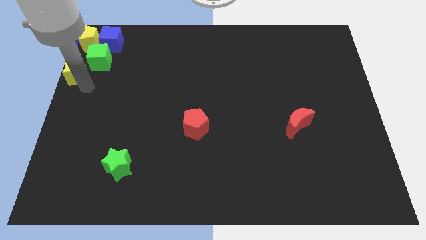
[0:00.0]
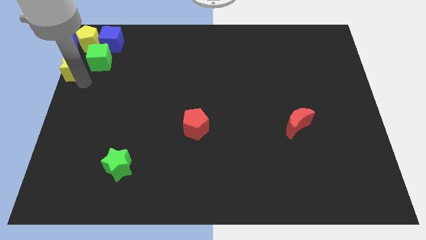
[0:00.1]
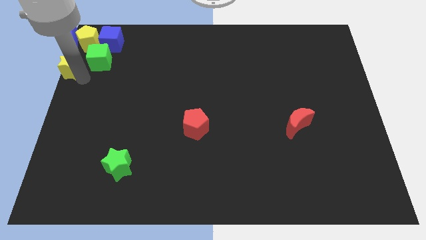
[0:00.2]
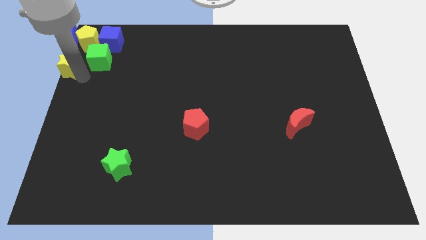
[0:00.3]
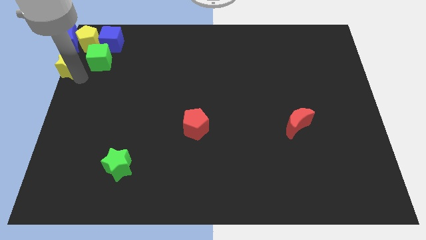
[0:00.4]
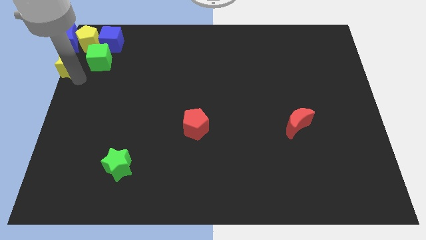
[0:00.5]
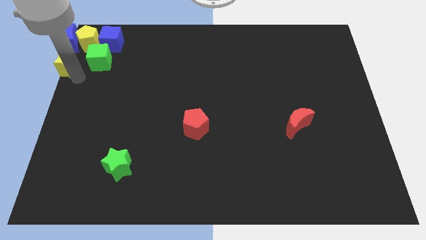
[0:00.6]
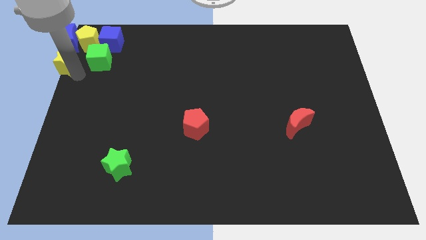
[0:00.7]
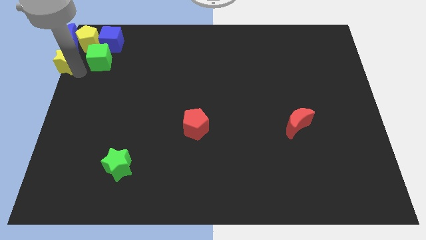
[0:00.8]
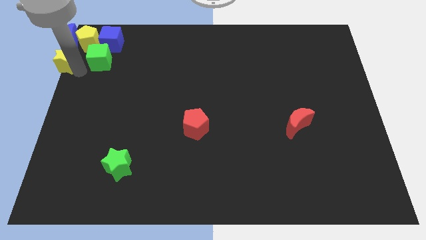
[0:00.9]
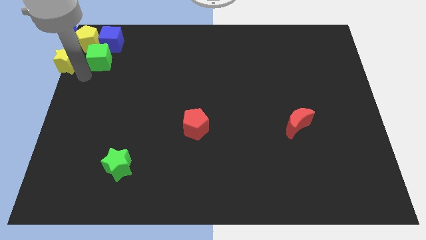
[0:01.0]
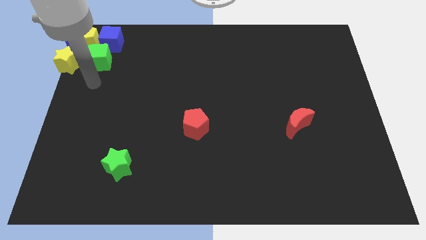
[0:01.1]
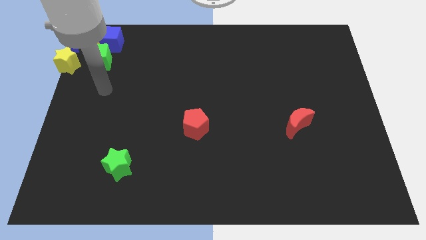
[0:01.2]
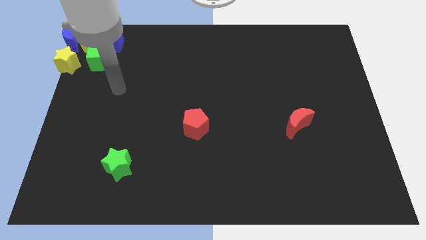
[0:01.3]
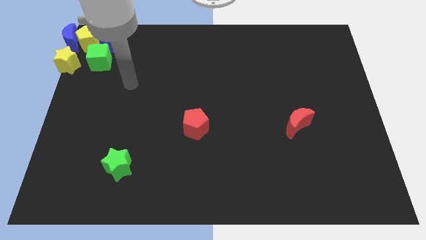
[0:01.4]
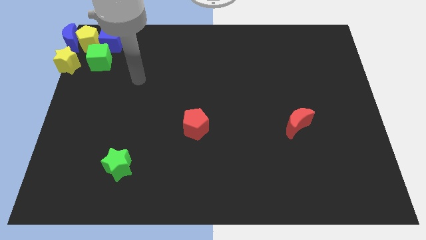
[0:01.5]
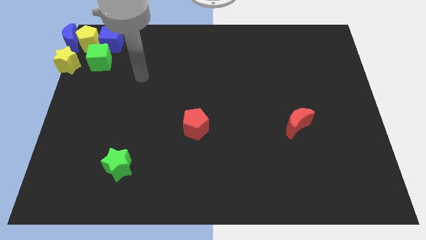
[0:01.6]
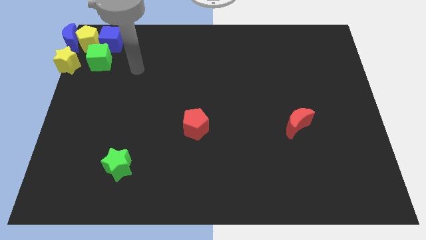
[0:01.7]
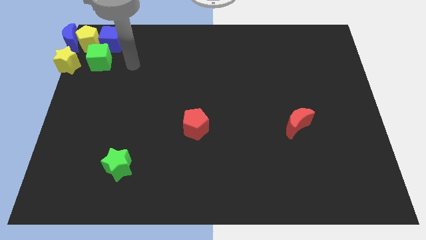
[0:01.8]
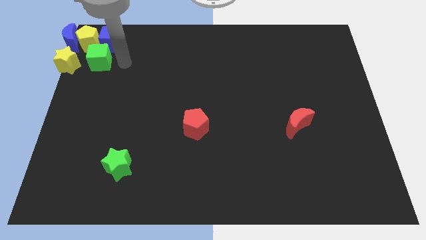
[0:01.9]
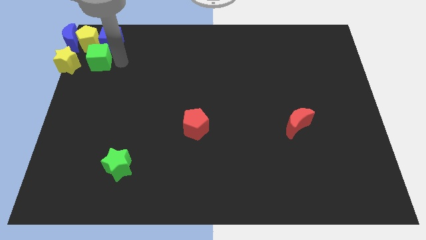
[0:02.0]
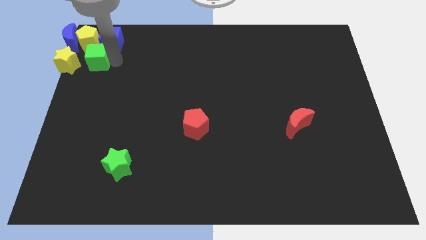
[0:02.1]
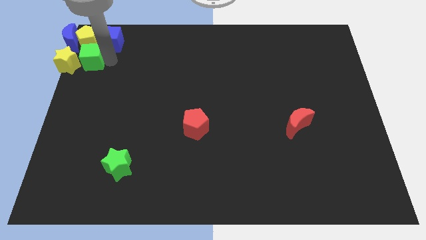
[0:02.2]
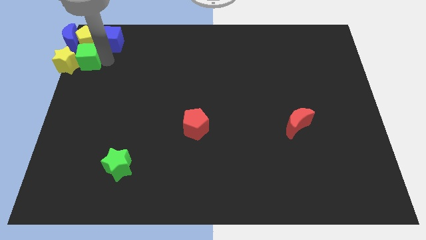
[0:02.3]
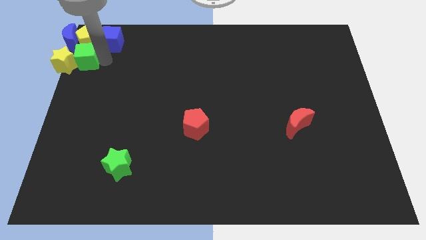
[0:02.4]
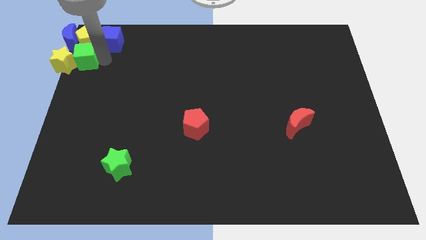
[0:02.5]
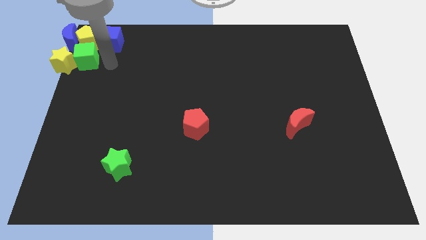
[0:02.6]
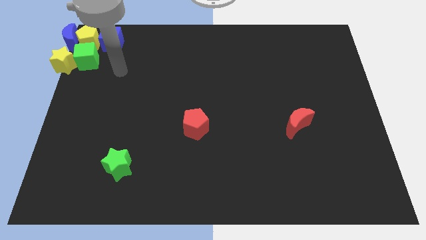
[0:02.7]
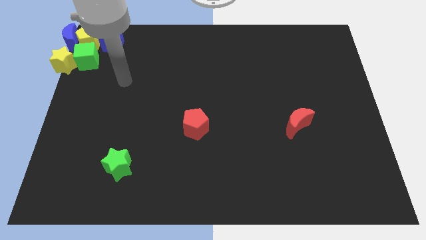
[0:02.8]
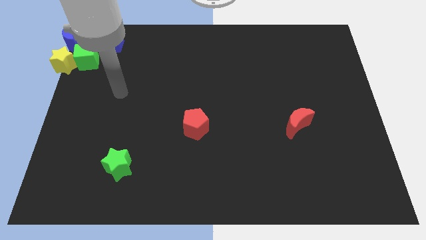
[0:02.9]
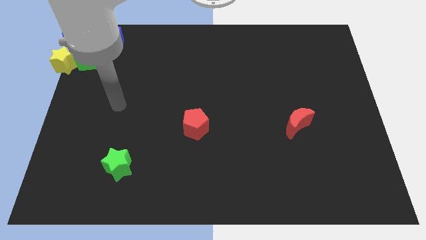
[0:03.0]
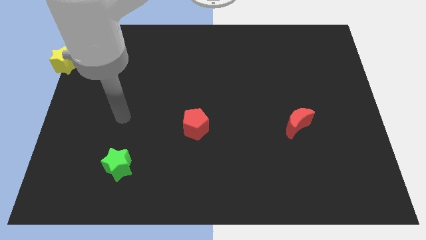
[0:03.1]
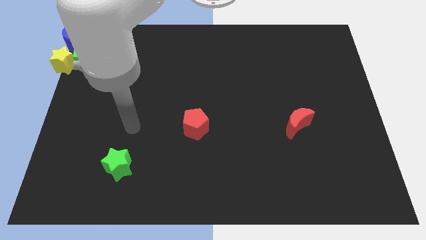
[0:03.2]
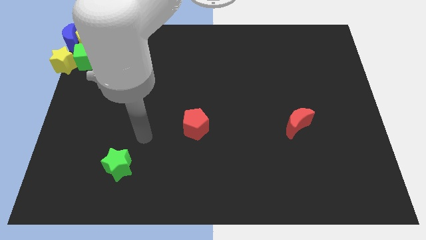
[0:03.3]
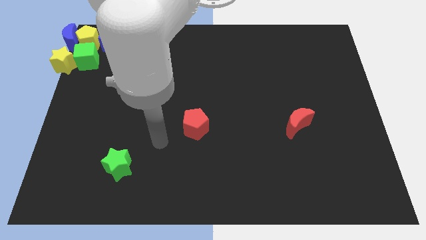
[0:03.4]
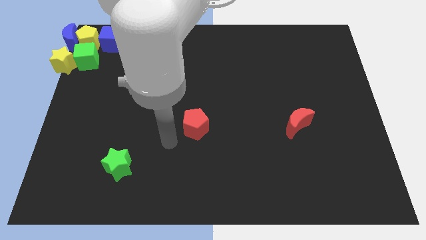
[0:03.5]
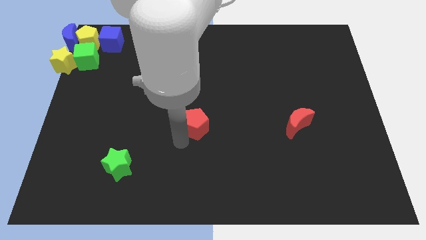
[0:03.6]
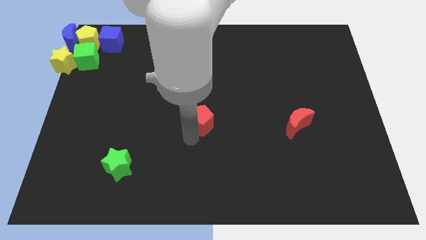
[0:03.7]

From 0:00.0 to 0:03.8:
place the green cube to the right side of the yellow star

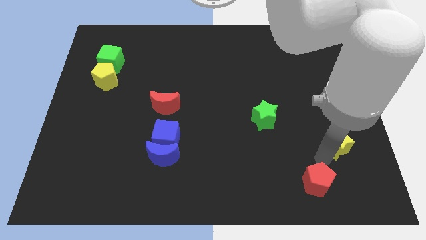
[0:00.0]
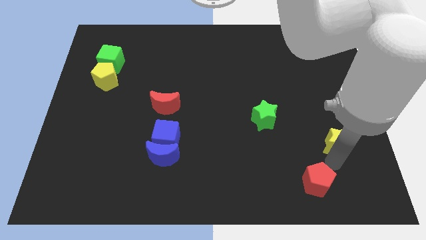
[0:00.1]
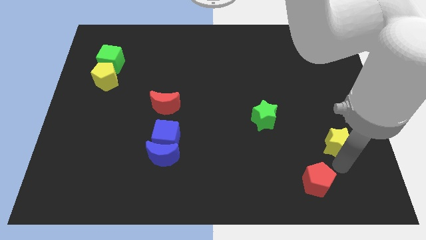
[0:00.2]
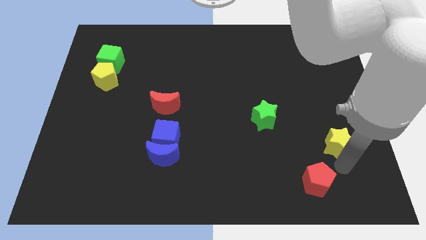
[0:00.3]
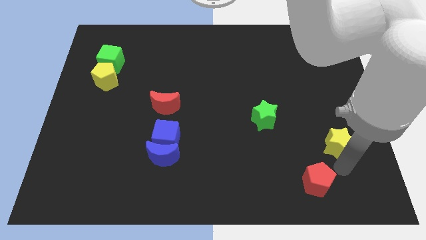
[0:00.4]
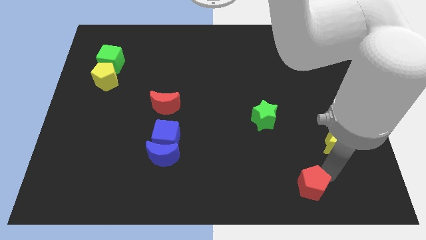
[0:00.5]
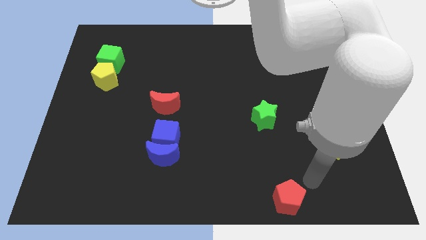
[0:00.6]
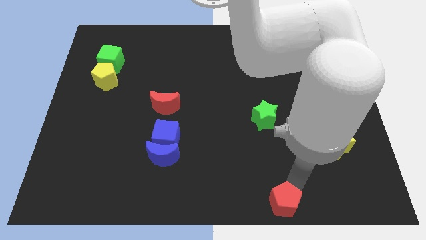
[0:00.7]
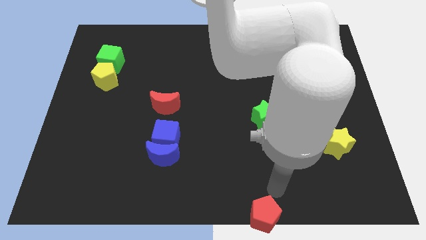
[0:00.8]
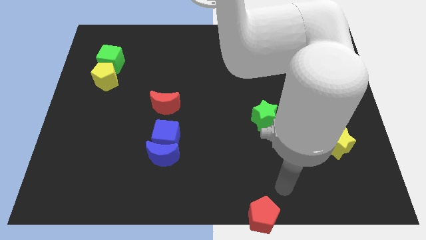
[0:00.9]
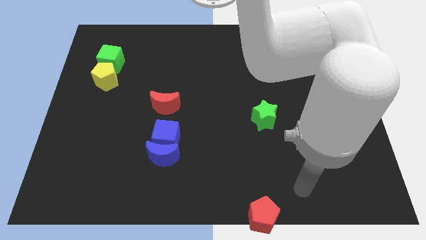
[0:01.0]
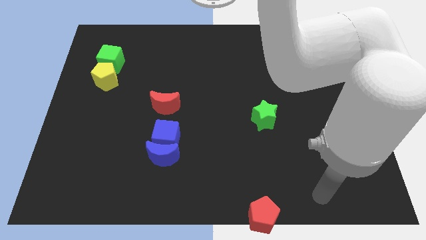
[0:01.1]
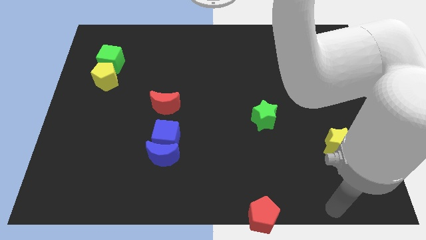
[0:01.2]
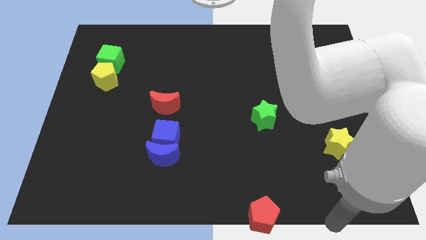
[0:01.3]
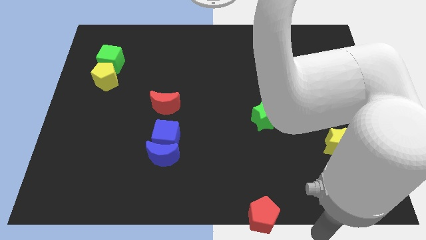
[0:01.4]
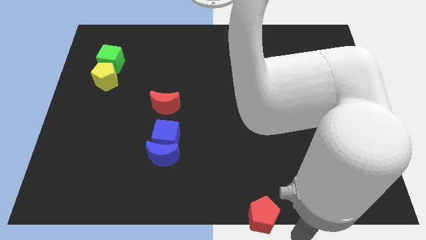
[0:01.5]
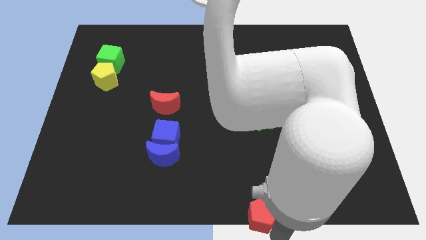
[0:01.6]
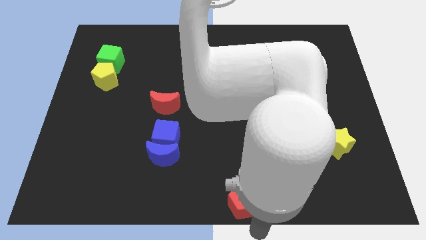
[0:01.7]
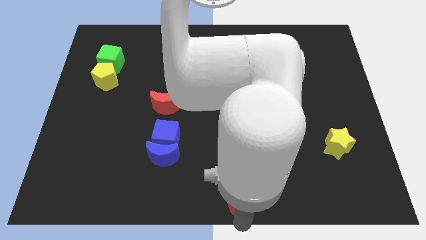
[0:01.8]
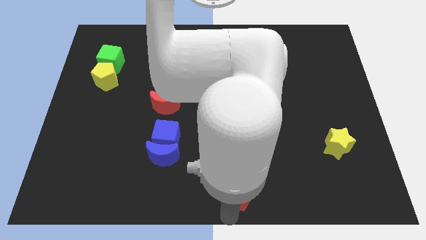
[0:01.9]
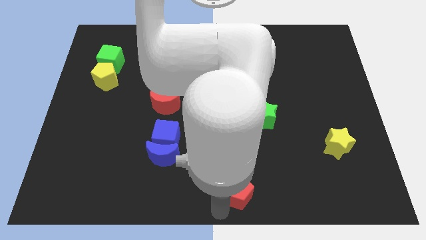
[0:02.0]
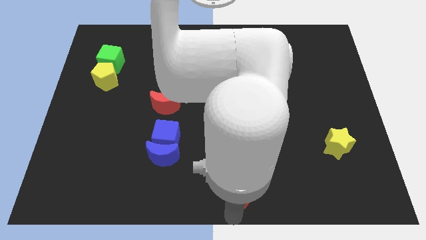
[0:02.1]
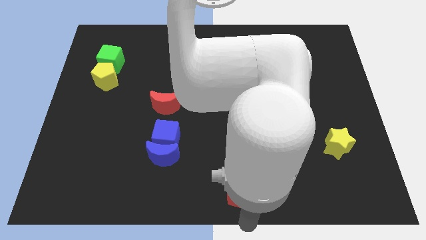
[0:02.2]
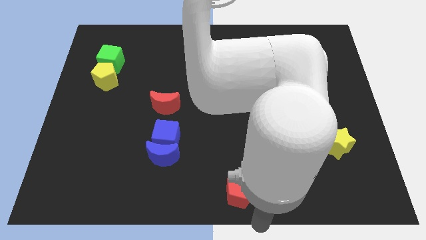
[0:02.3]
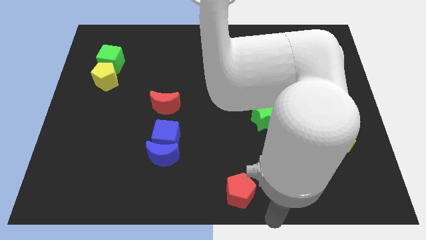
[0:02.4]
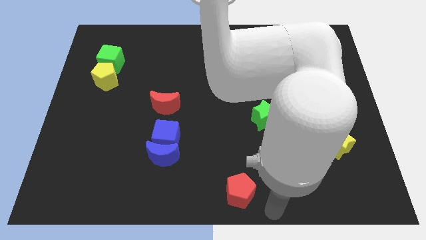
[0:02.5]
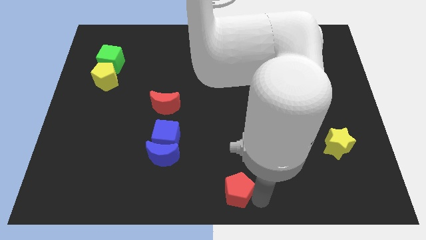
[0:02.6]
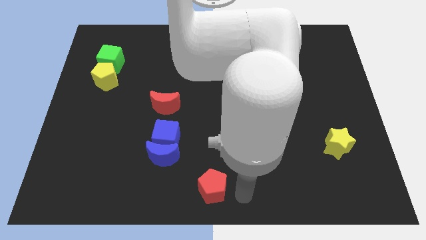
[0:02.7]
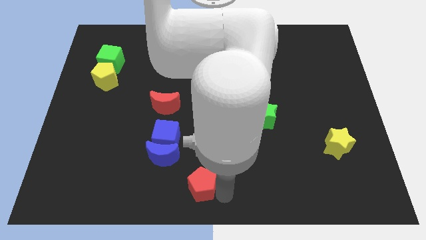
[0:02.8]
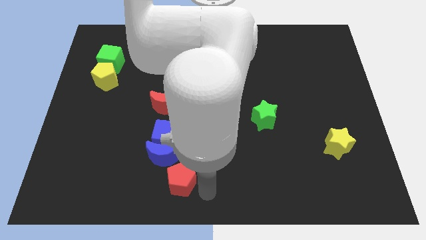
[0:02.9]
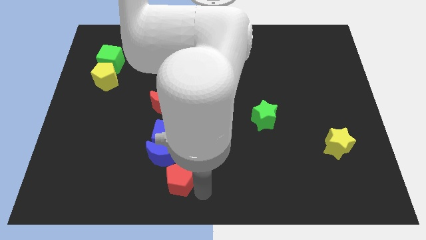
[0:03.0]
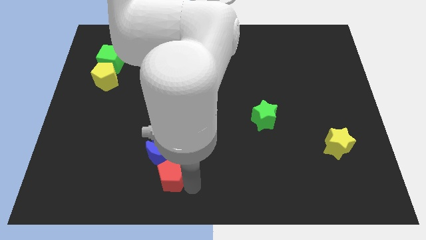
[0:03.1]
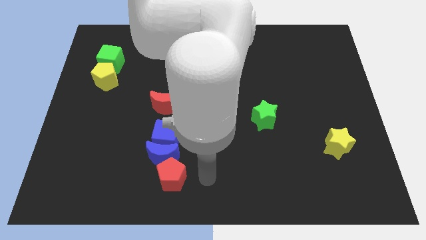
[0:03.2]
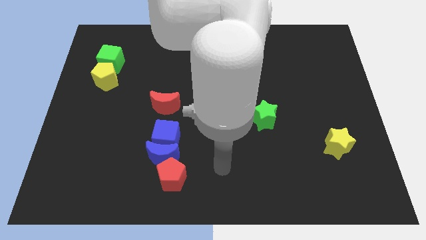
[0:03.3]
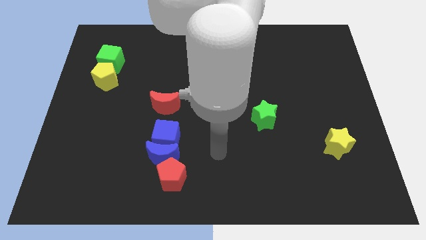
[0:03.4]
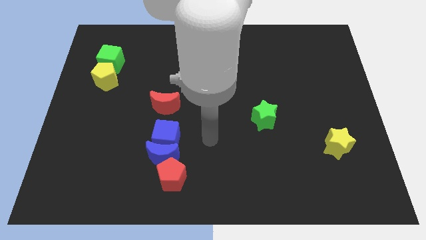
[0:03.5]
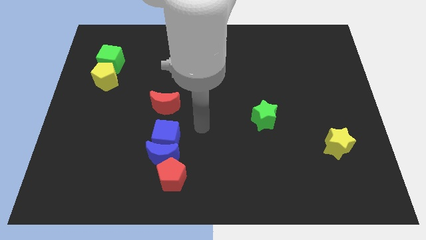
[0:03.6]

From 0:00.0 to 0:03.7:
push the red pentagon into the blue crescent

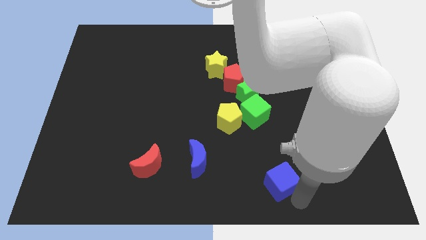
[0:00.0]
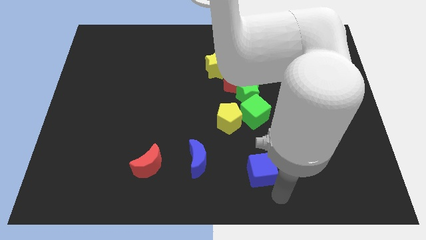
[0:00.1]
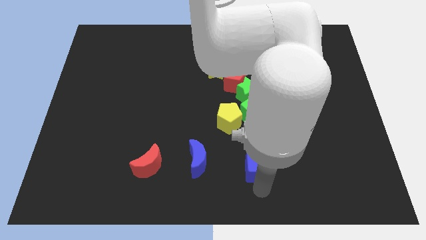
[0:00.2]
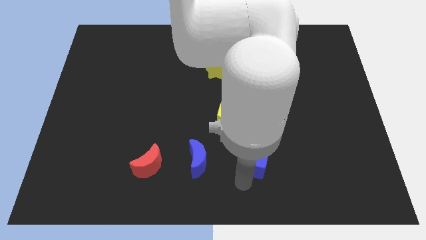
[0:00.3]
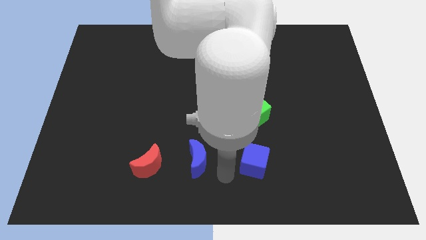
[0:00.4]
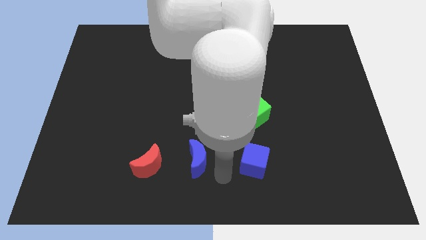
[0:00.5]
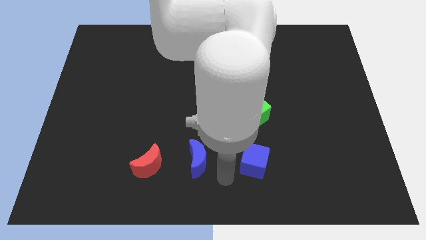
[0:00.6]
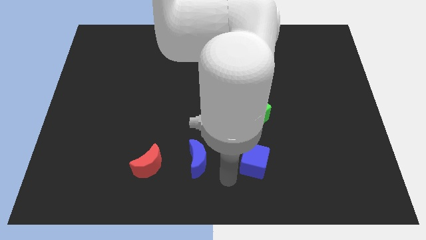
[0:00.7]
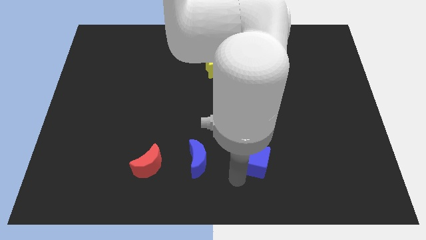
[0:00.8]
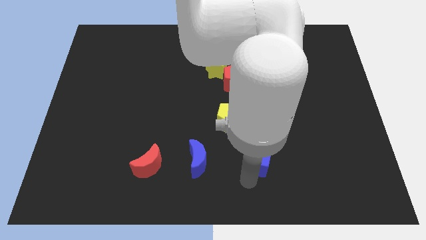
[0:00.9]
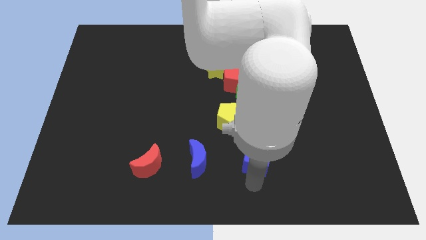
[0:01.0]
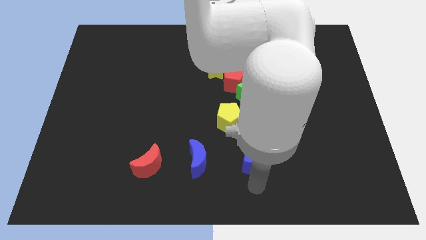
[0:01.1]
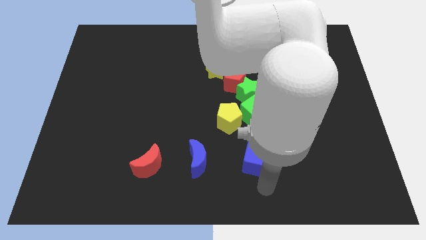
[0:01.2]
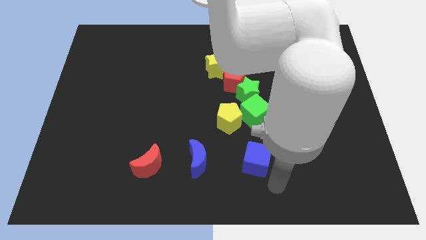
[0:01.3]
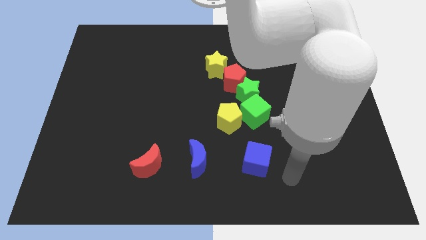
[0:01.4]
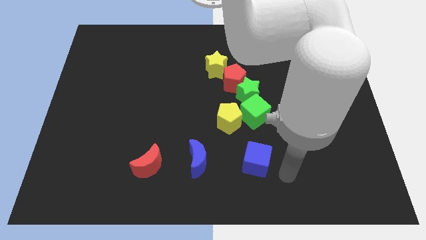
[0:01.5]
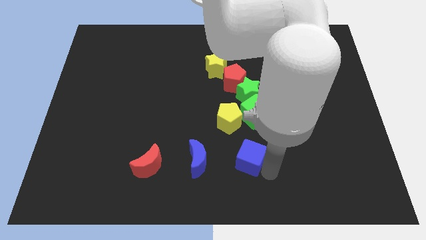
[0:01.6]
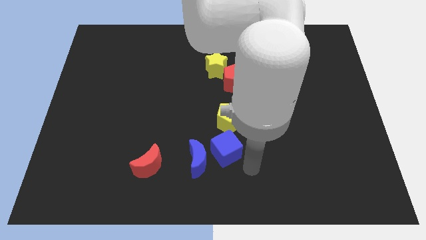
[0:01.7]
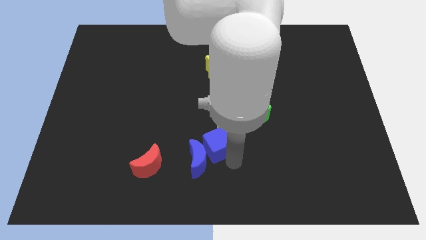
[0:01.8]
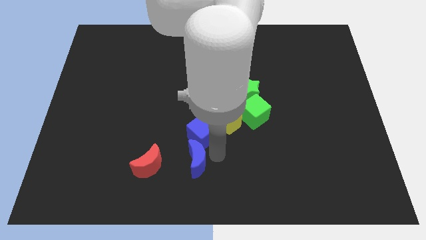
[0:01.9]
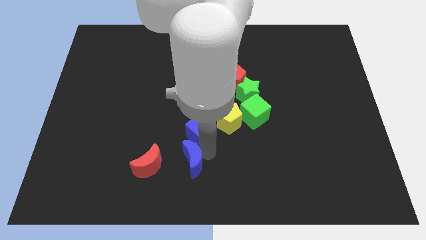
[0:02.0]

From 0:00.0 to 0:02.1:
drag the blue cube into the top side of the blue crescent
